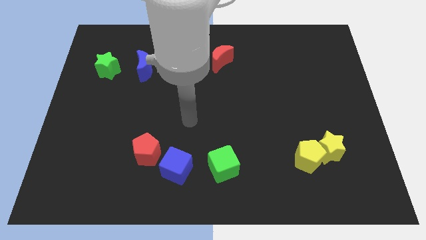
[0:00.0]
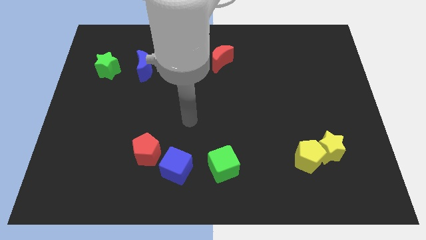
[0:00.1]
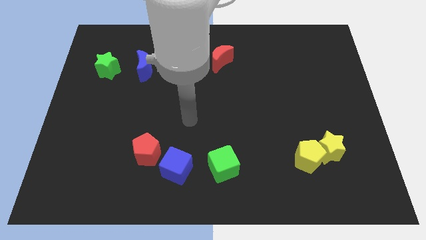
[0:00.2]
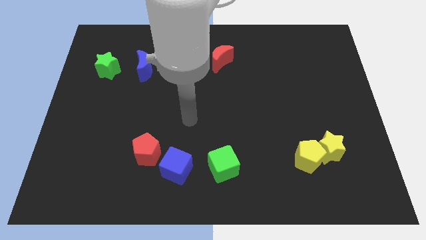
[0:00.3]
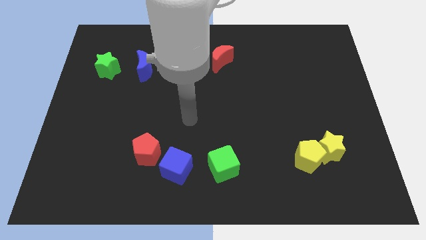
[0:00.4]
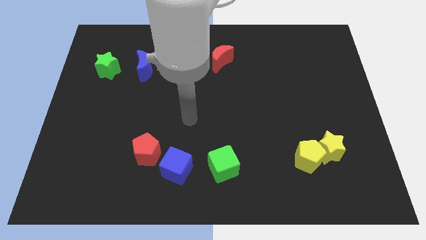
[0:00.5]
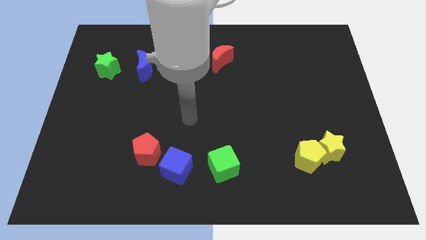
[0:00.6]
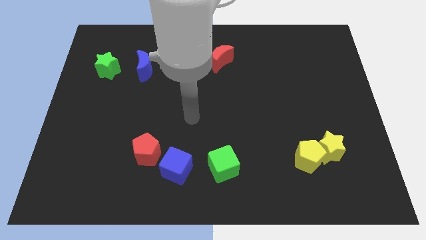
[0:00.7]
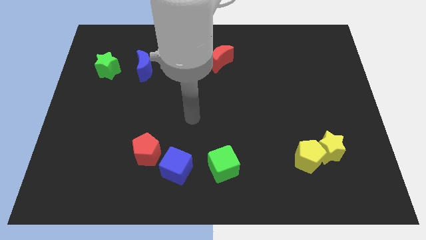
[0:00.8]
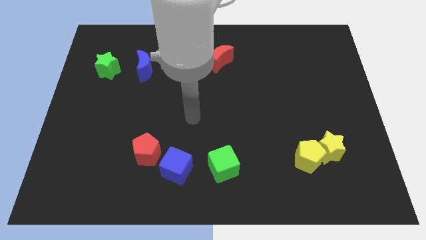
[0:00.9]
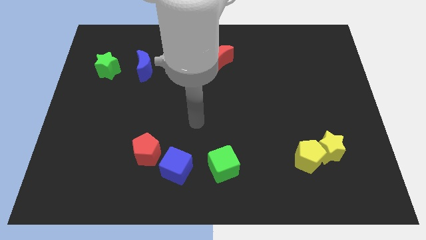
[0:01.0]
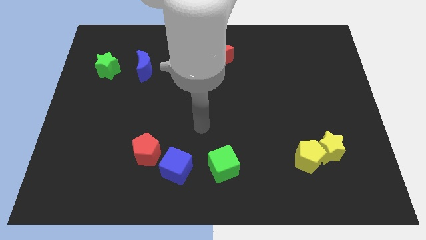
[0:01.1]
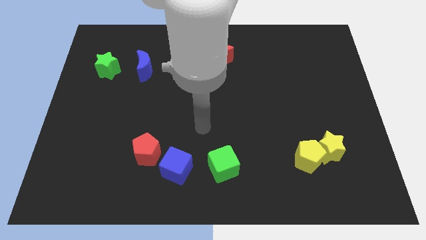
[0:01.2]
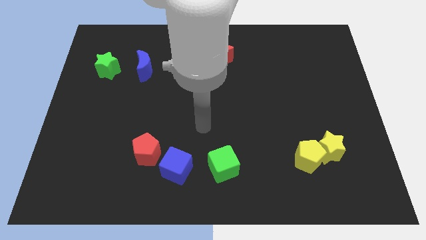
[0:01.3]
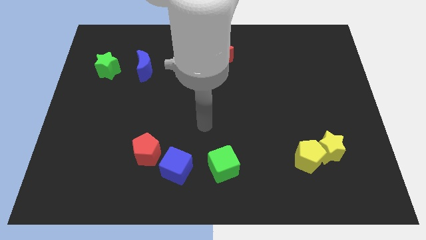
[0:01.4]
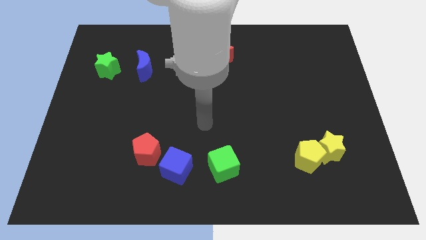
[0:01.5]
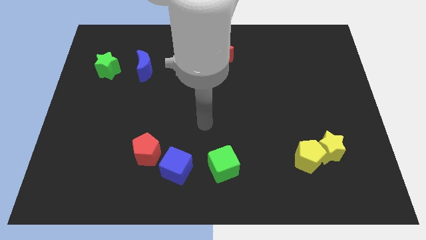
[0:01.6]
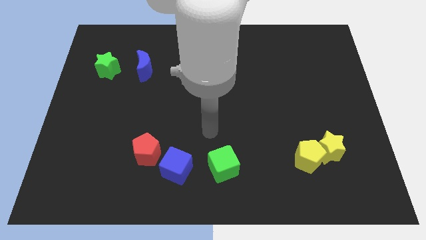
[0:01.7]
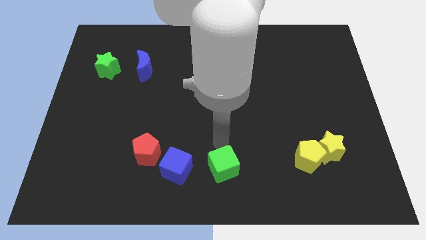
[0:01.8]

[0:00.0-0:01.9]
point your arm at the top side of the green cube

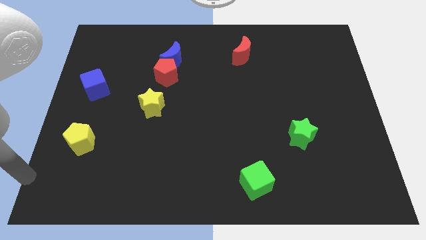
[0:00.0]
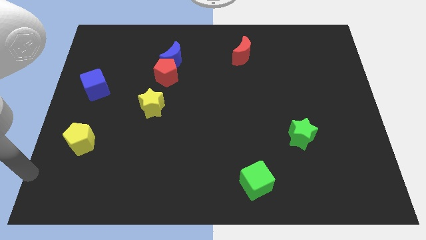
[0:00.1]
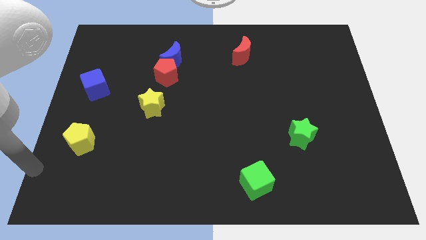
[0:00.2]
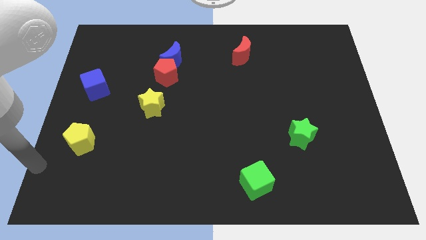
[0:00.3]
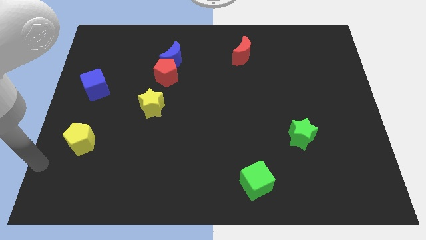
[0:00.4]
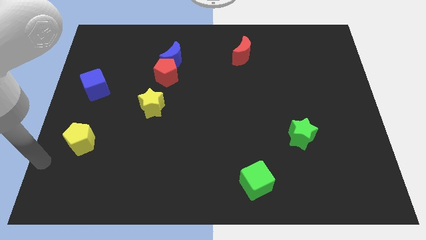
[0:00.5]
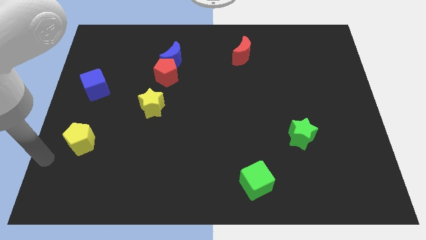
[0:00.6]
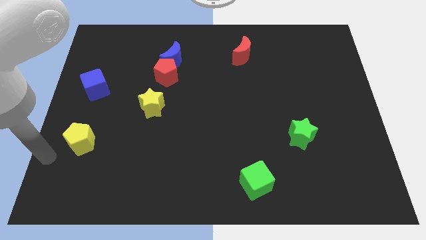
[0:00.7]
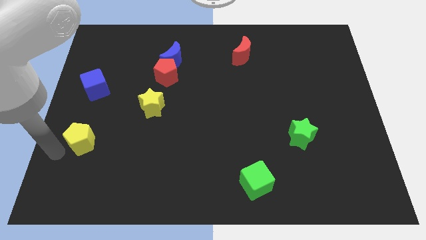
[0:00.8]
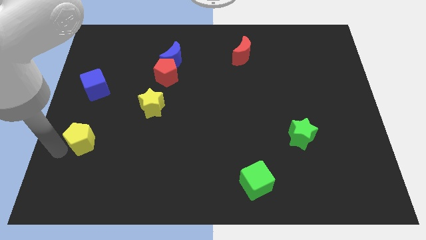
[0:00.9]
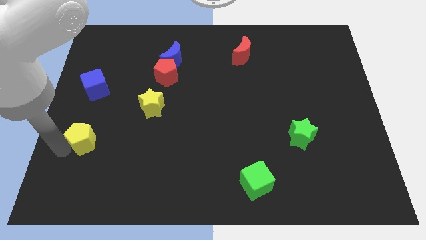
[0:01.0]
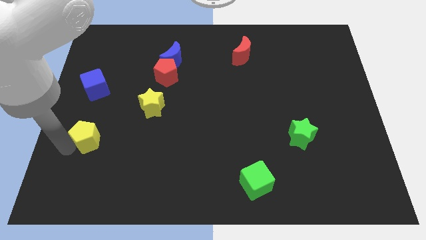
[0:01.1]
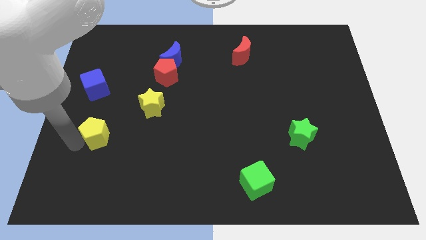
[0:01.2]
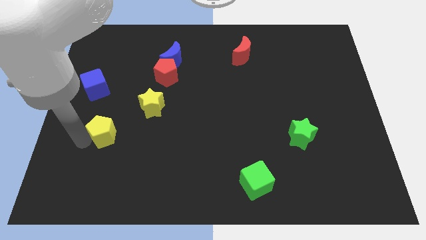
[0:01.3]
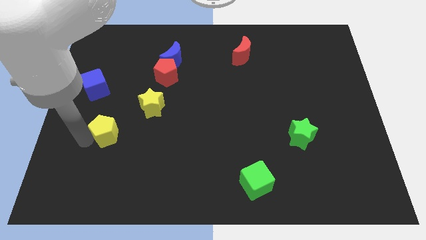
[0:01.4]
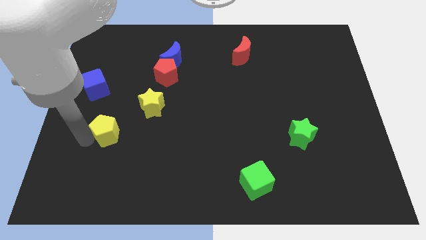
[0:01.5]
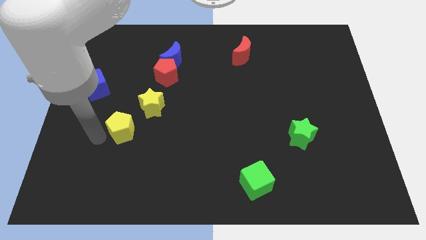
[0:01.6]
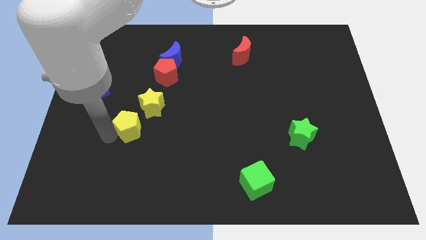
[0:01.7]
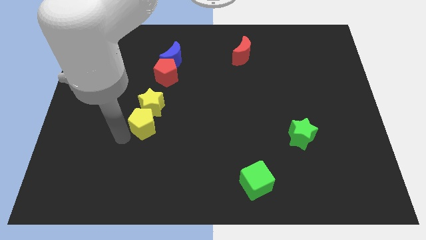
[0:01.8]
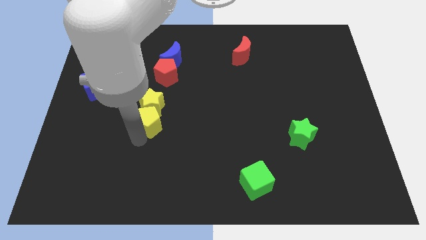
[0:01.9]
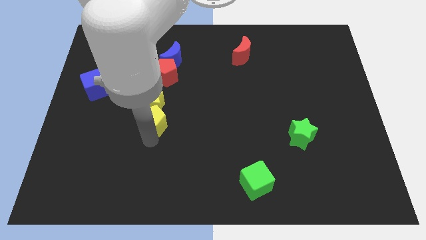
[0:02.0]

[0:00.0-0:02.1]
push the yellow pentagon into the yellow star

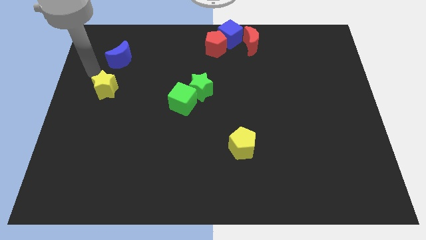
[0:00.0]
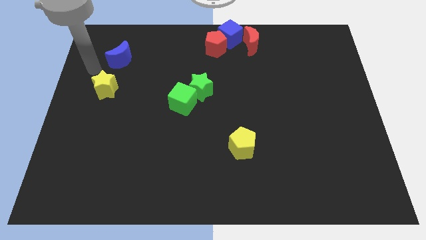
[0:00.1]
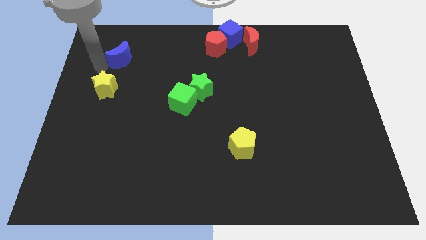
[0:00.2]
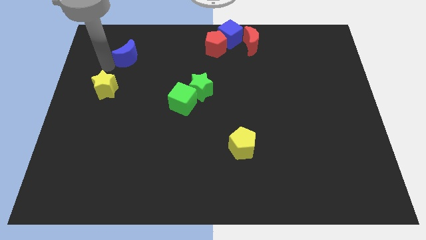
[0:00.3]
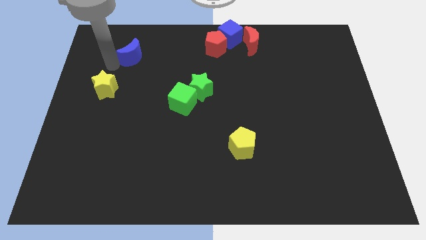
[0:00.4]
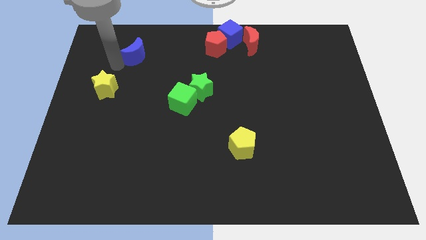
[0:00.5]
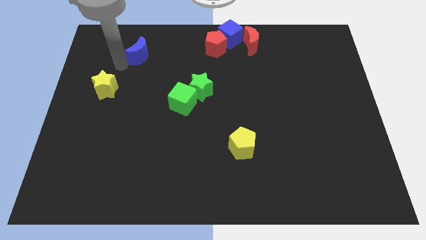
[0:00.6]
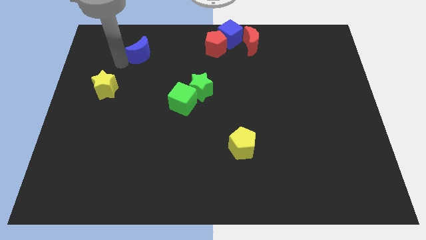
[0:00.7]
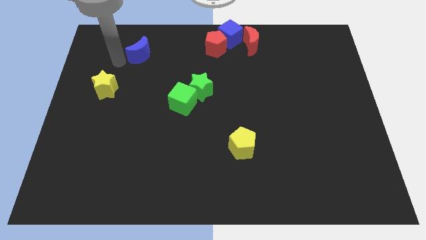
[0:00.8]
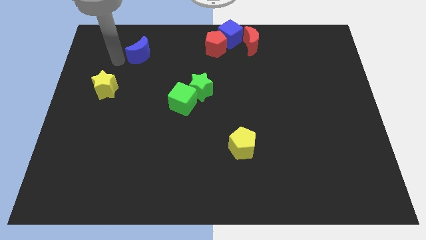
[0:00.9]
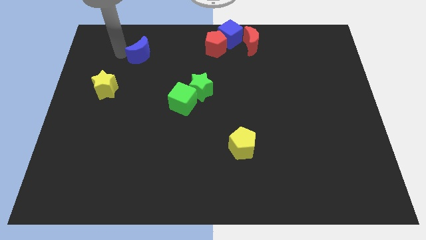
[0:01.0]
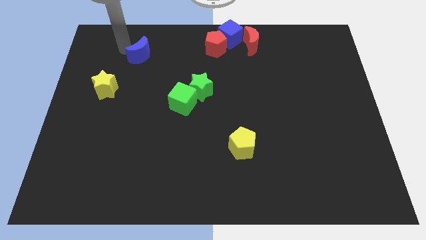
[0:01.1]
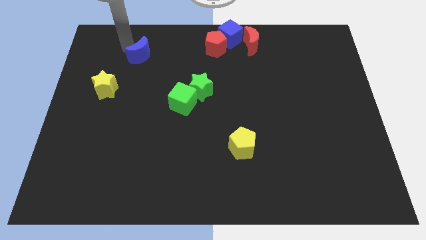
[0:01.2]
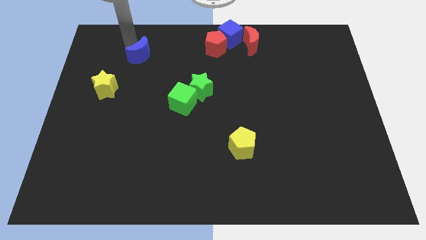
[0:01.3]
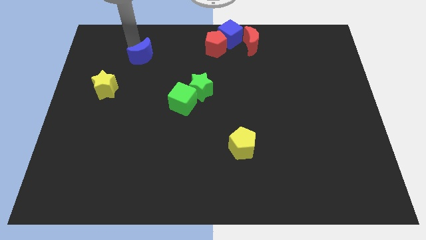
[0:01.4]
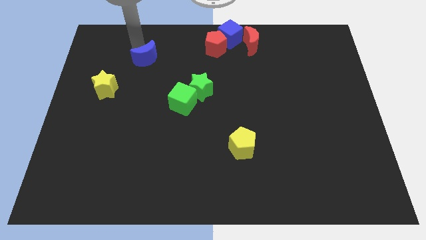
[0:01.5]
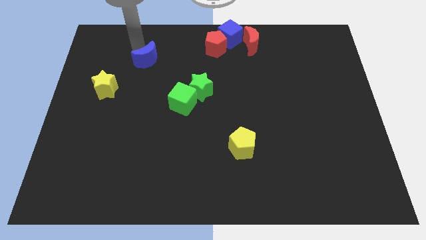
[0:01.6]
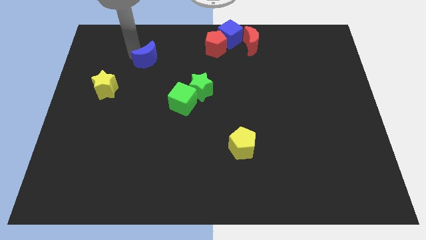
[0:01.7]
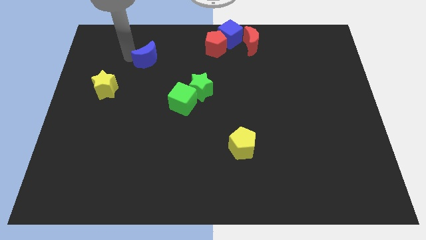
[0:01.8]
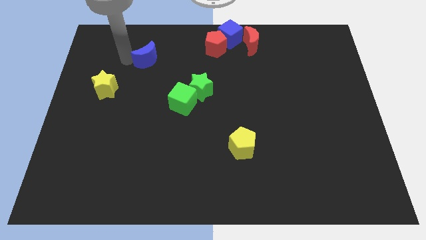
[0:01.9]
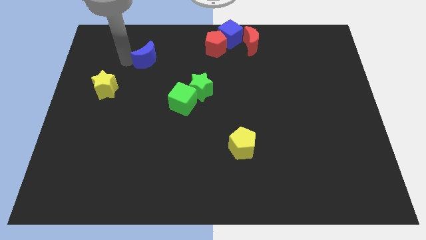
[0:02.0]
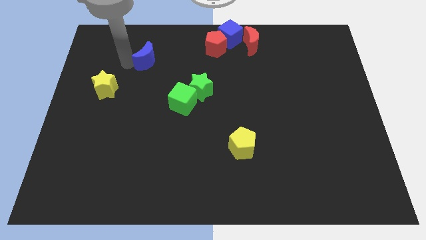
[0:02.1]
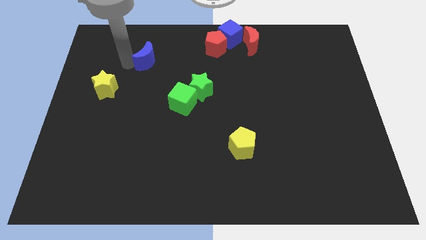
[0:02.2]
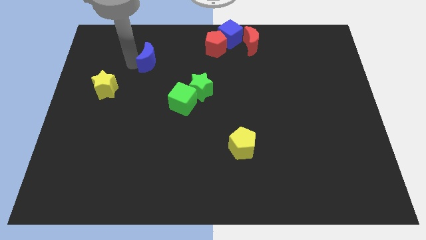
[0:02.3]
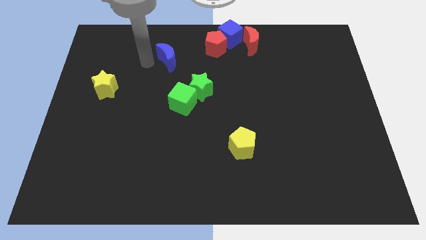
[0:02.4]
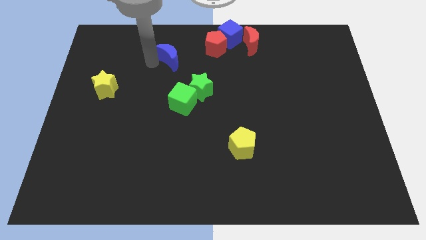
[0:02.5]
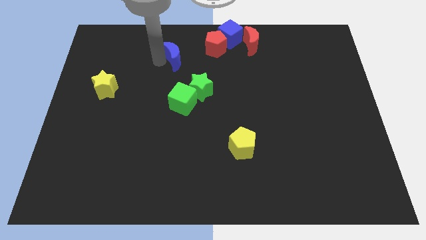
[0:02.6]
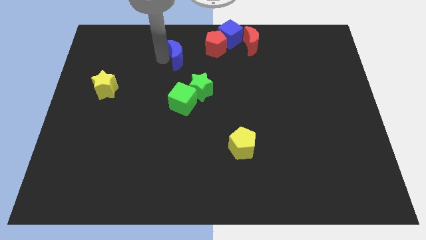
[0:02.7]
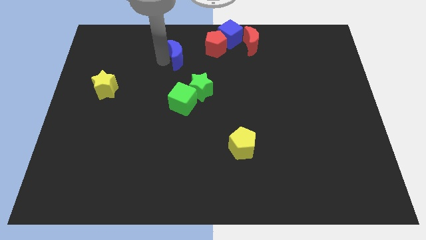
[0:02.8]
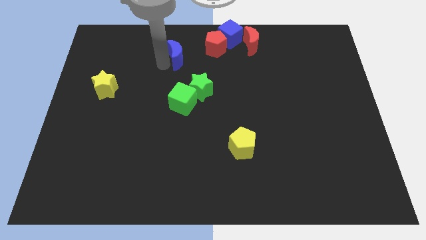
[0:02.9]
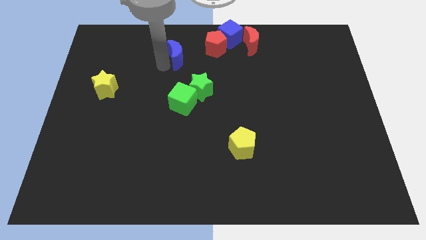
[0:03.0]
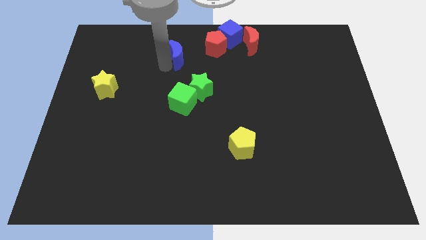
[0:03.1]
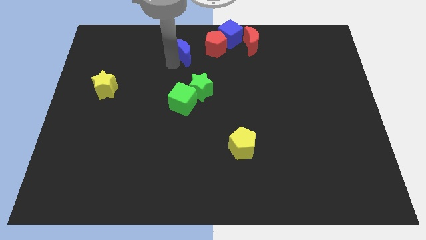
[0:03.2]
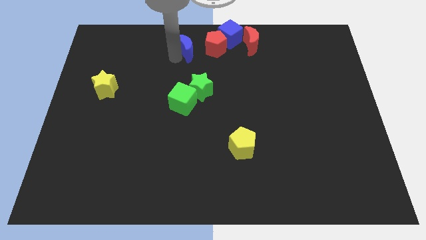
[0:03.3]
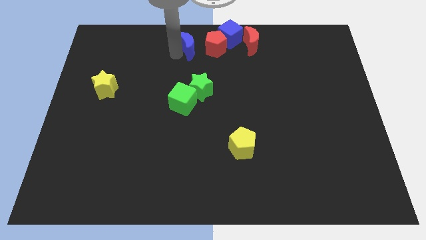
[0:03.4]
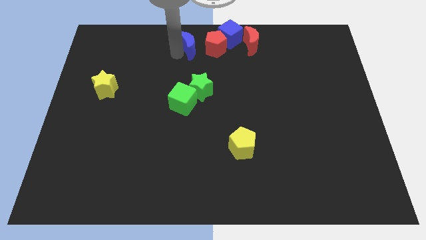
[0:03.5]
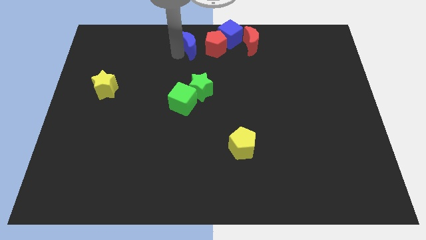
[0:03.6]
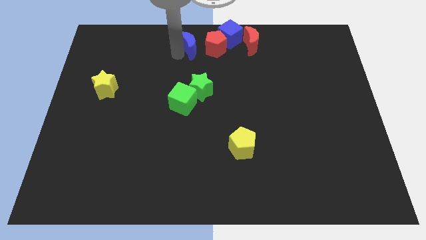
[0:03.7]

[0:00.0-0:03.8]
move the blue crescent to the left of the red pentagon

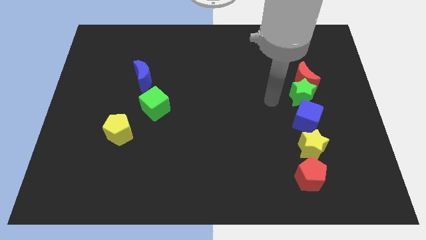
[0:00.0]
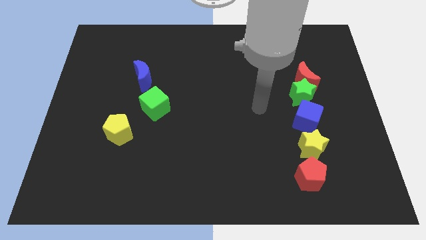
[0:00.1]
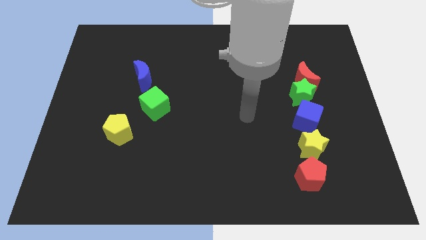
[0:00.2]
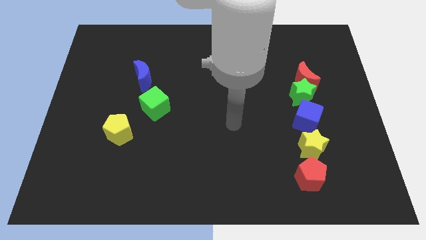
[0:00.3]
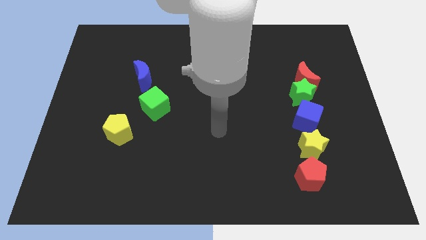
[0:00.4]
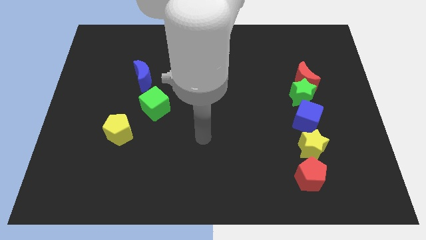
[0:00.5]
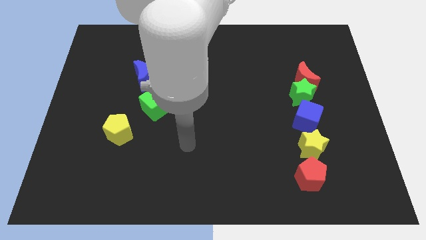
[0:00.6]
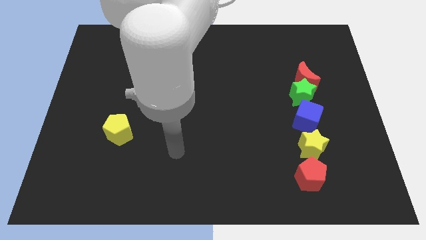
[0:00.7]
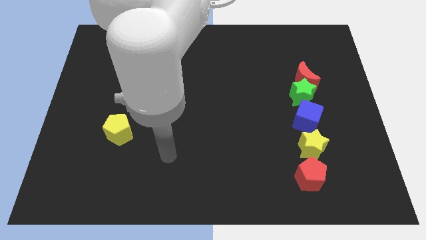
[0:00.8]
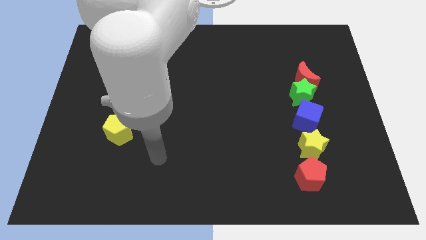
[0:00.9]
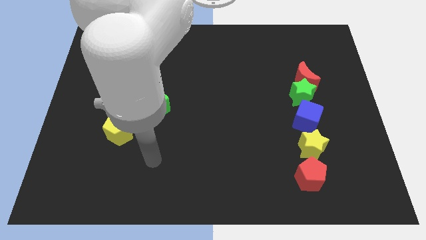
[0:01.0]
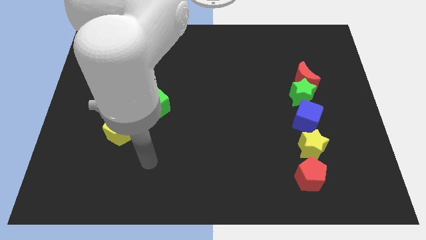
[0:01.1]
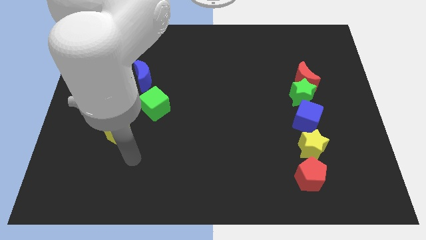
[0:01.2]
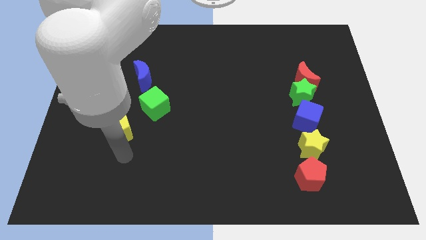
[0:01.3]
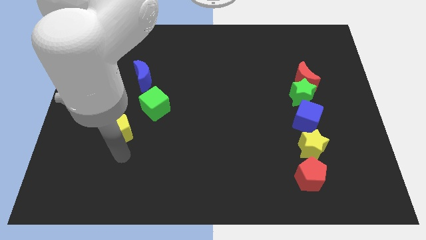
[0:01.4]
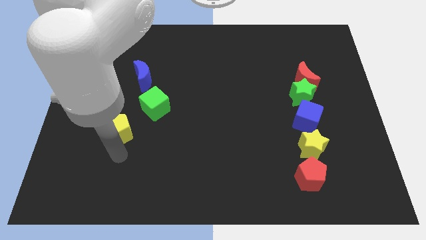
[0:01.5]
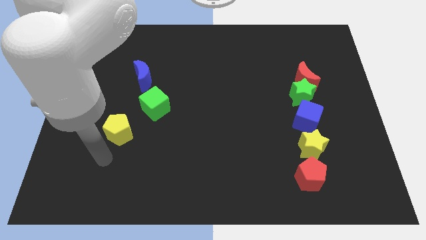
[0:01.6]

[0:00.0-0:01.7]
drag the pointer to the bottom of the yellow pentagon
